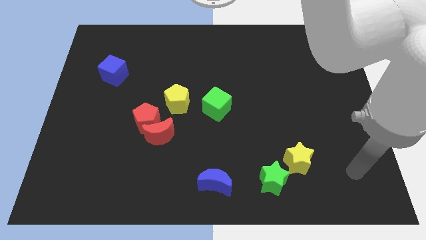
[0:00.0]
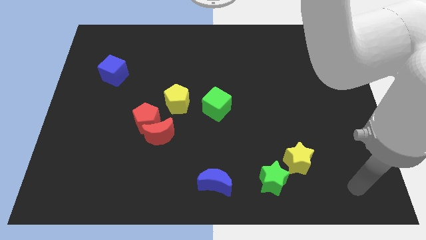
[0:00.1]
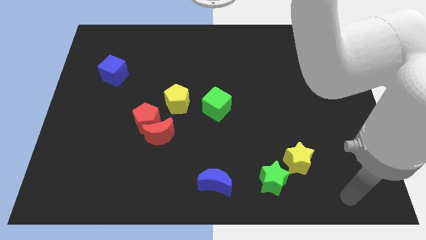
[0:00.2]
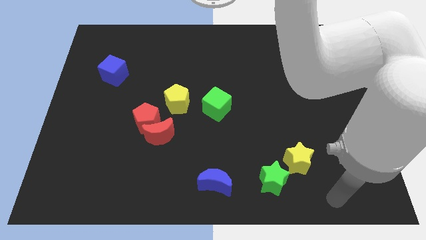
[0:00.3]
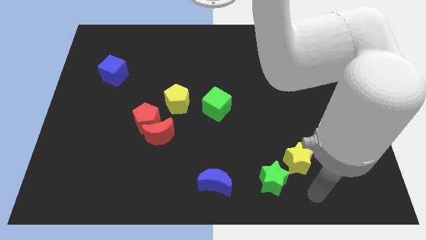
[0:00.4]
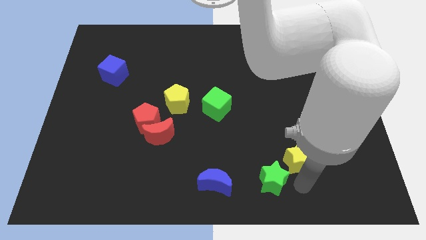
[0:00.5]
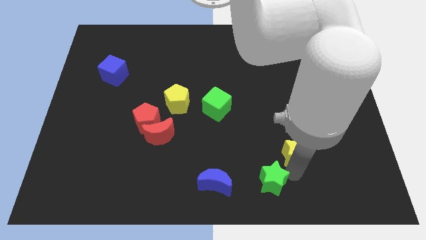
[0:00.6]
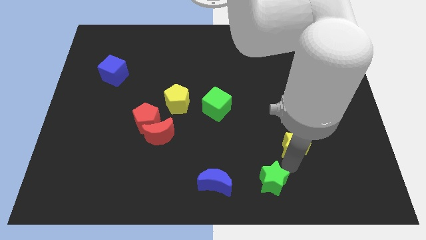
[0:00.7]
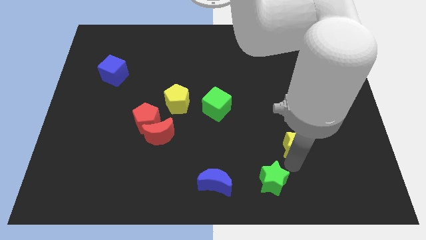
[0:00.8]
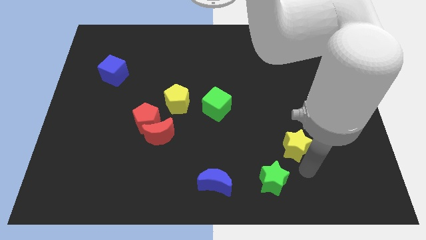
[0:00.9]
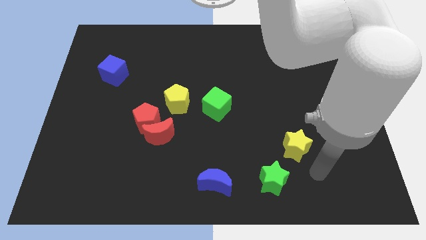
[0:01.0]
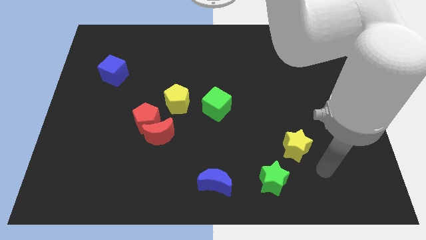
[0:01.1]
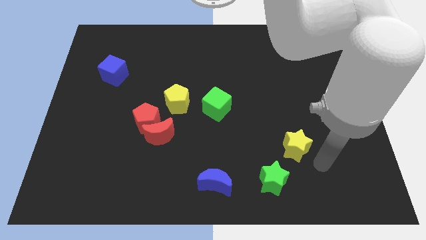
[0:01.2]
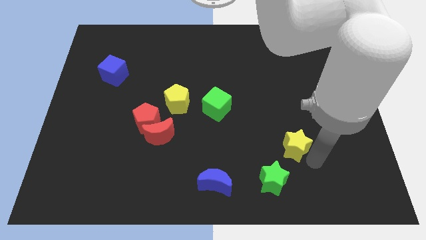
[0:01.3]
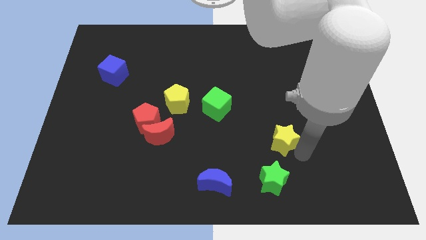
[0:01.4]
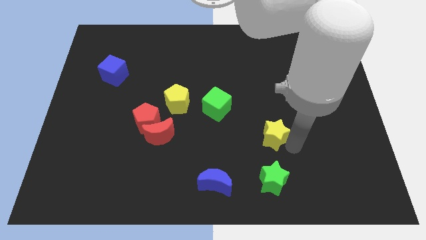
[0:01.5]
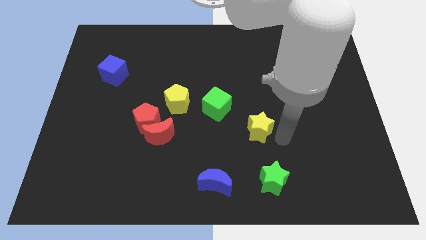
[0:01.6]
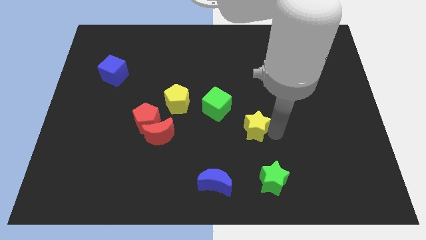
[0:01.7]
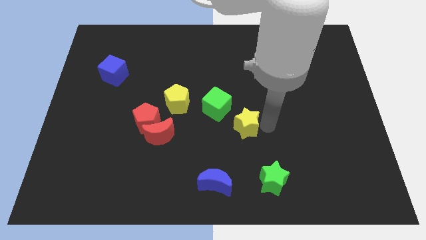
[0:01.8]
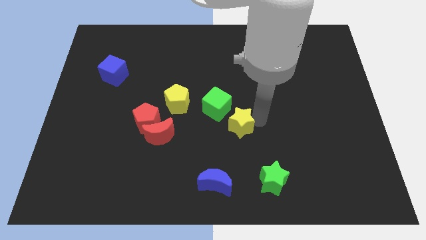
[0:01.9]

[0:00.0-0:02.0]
move the yellow star to the right side of the green cube

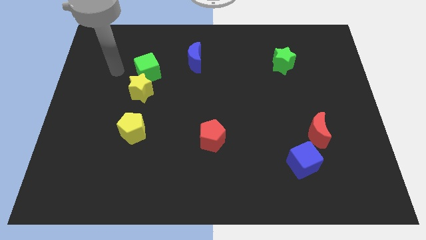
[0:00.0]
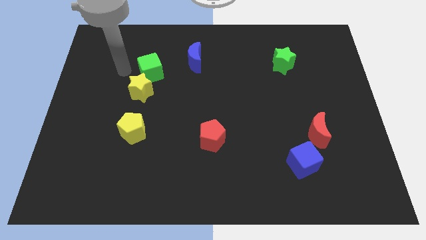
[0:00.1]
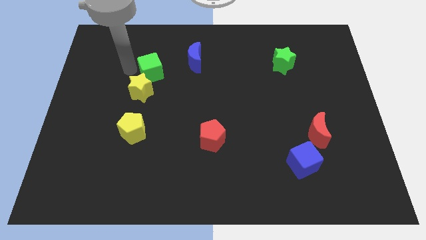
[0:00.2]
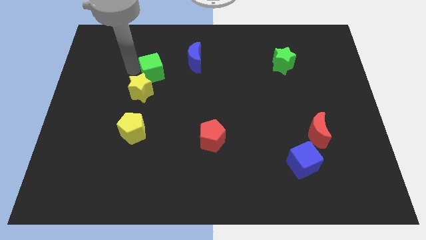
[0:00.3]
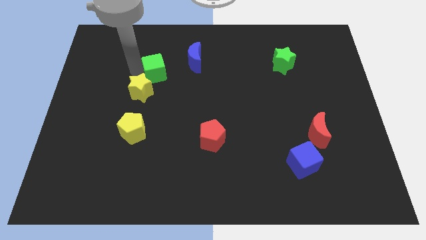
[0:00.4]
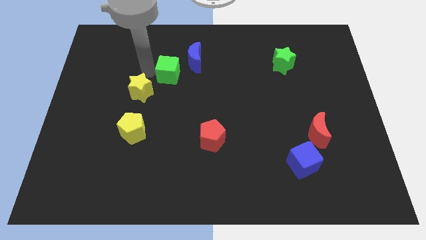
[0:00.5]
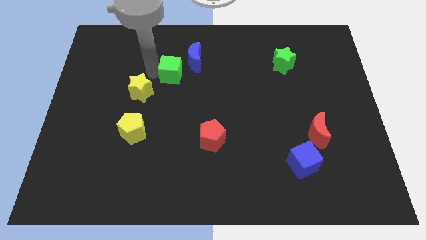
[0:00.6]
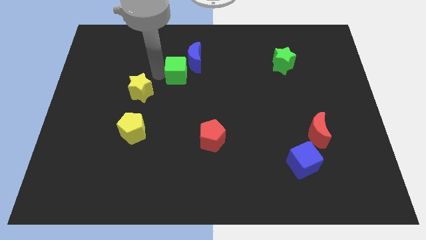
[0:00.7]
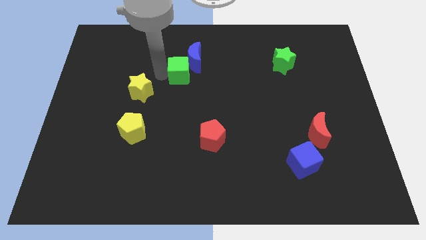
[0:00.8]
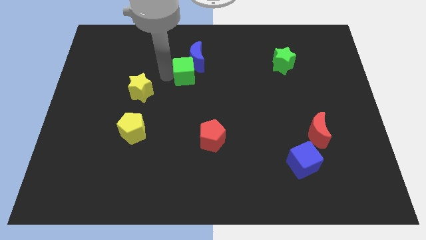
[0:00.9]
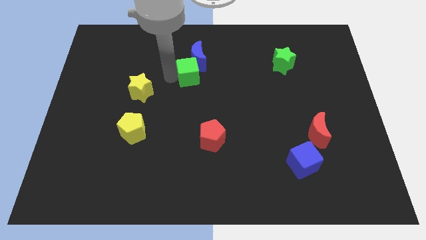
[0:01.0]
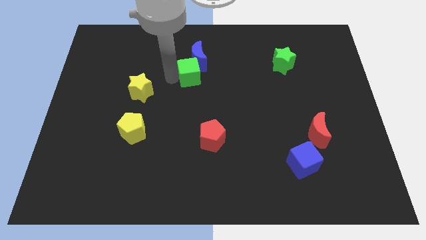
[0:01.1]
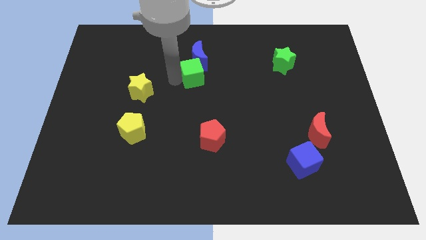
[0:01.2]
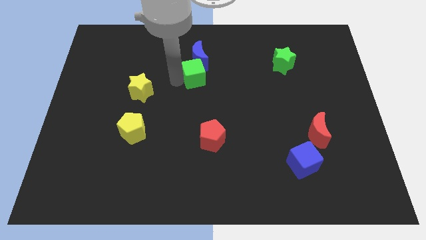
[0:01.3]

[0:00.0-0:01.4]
put green cube at the bottom of blue crescent

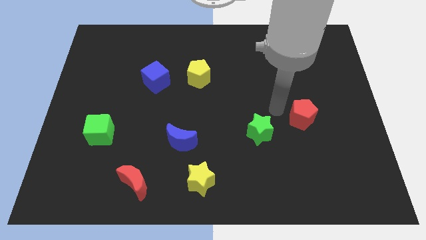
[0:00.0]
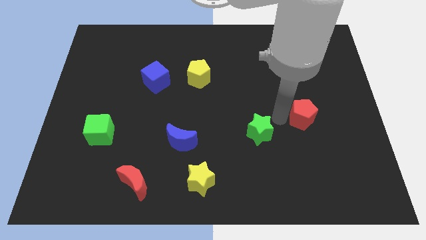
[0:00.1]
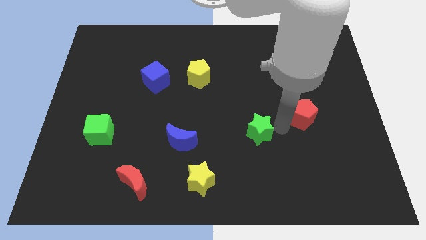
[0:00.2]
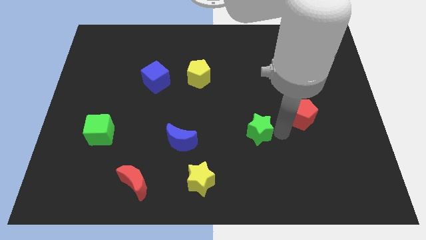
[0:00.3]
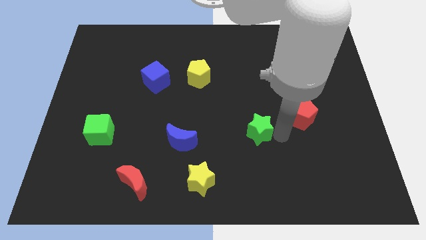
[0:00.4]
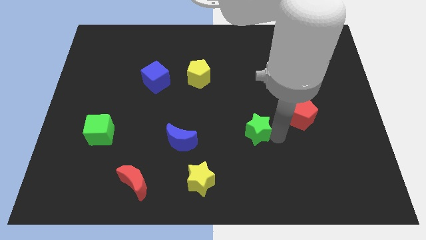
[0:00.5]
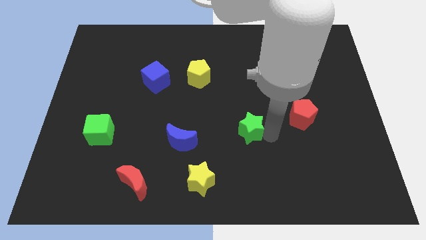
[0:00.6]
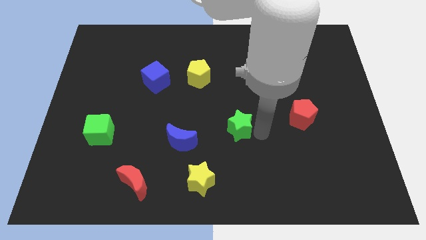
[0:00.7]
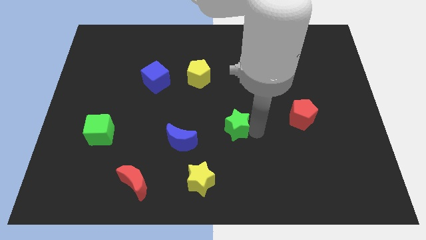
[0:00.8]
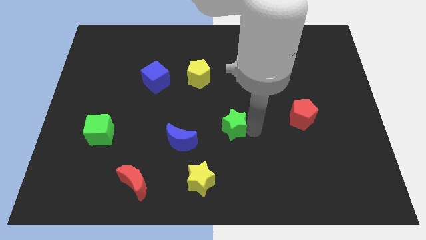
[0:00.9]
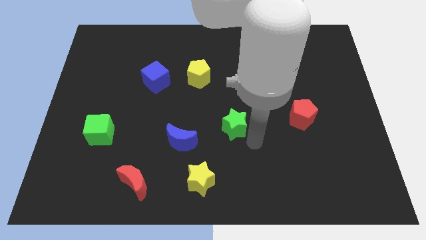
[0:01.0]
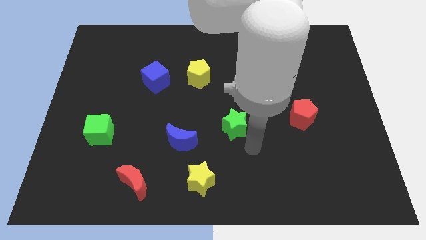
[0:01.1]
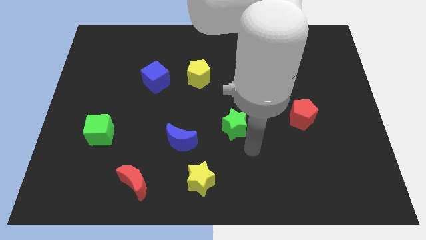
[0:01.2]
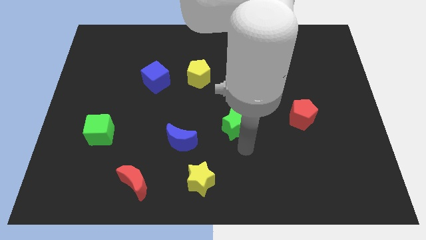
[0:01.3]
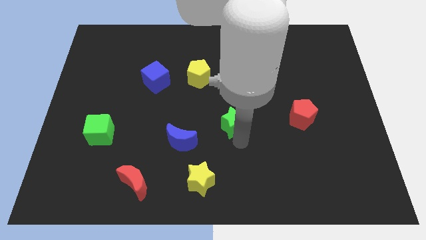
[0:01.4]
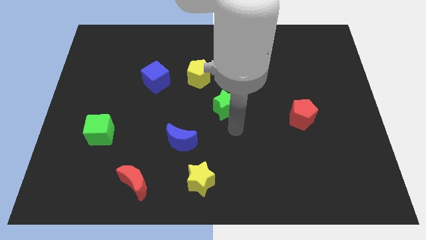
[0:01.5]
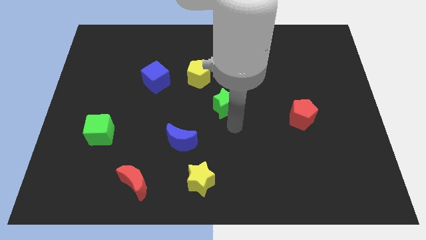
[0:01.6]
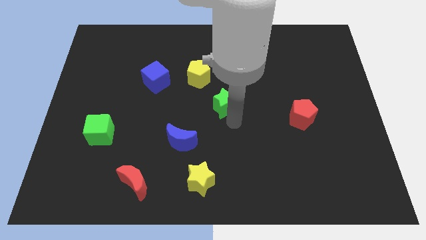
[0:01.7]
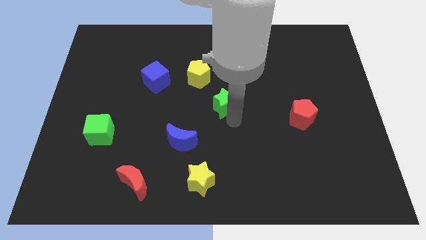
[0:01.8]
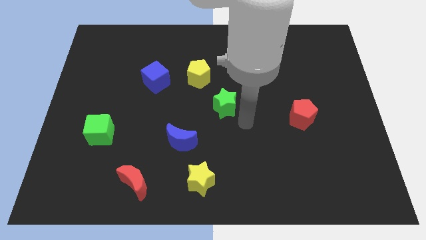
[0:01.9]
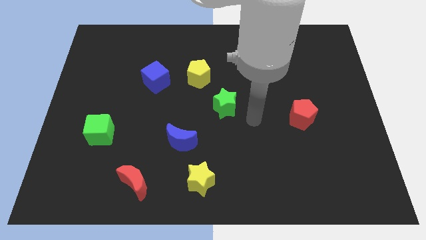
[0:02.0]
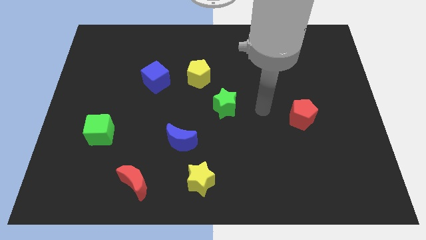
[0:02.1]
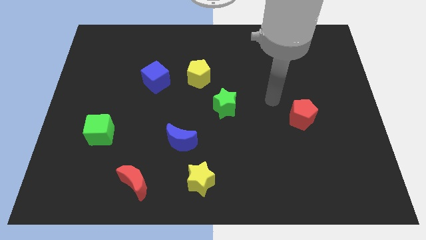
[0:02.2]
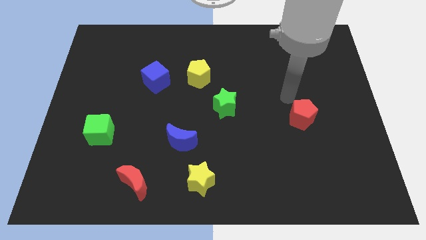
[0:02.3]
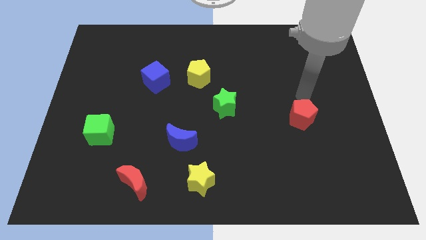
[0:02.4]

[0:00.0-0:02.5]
push the green star to the center of the board

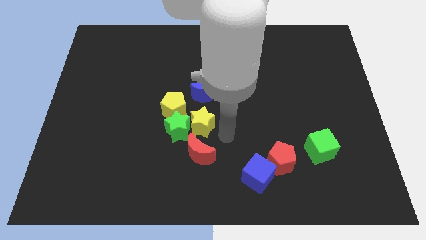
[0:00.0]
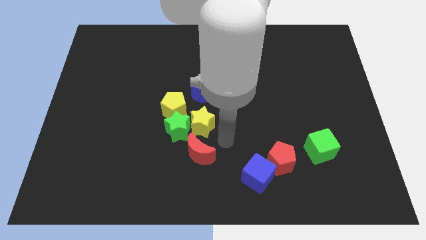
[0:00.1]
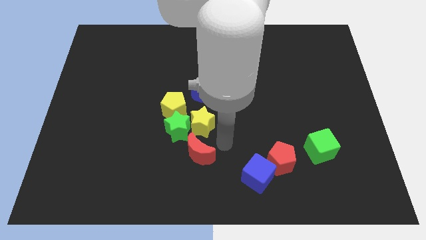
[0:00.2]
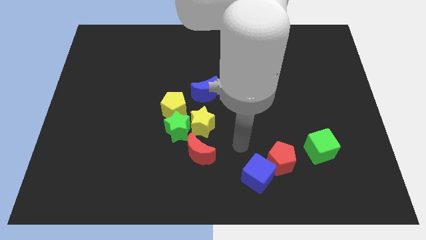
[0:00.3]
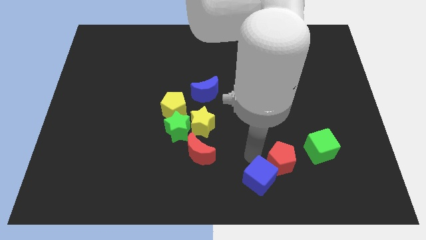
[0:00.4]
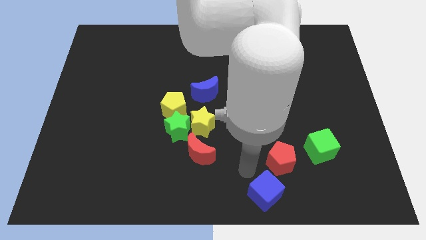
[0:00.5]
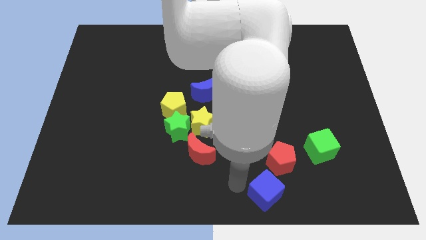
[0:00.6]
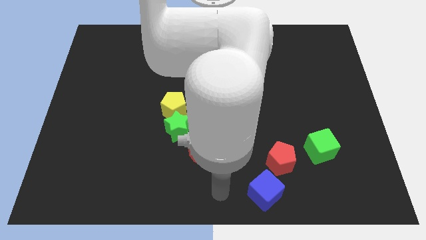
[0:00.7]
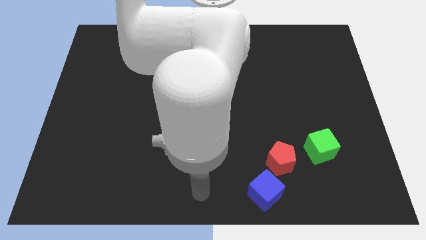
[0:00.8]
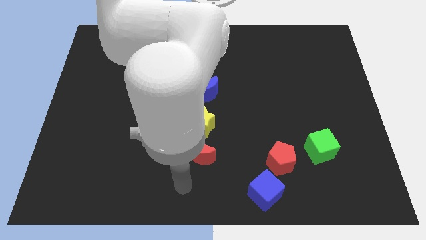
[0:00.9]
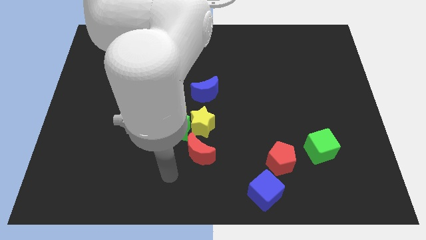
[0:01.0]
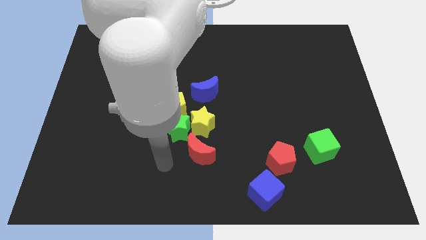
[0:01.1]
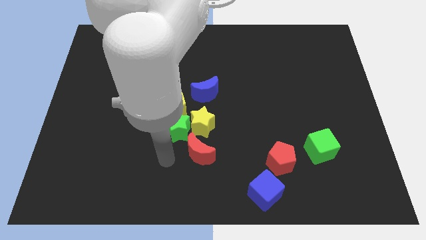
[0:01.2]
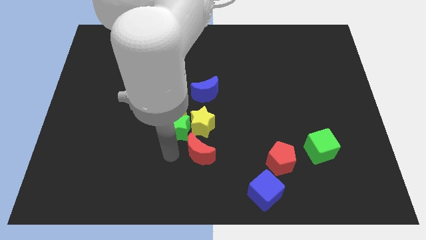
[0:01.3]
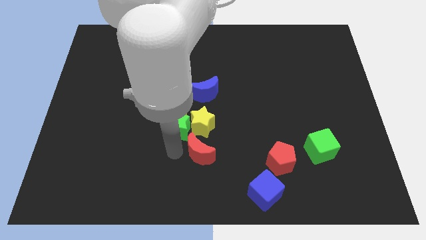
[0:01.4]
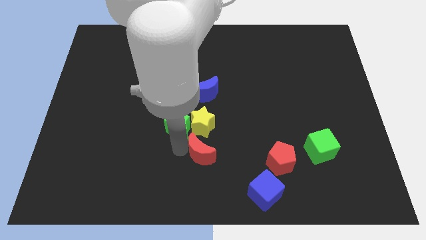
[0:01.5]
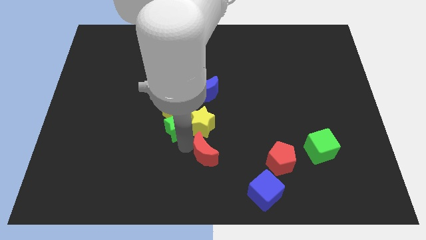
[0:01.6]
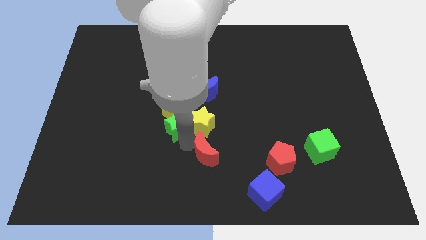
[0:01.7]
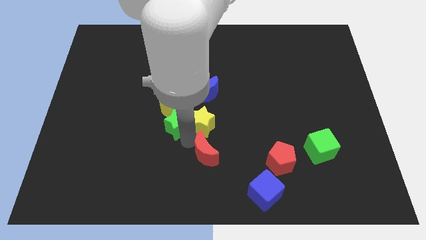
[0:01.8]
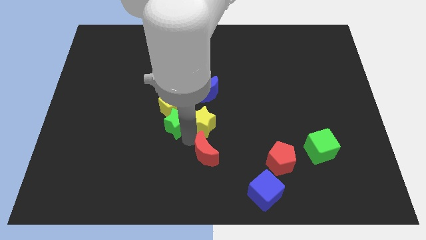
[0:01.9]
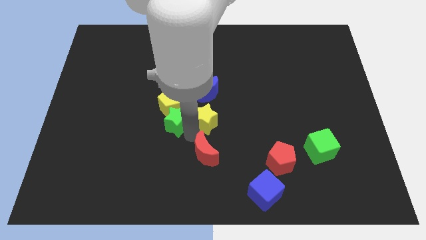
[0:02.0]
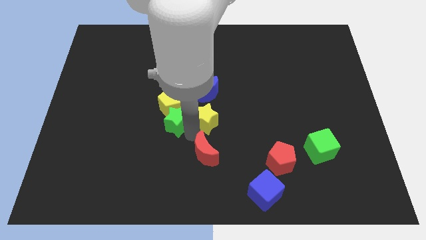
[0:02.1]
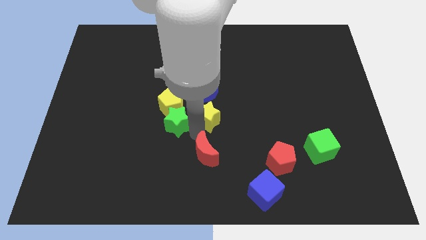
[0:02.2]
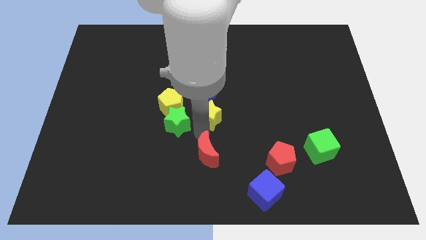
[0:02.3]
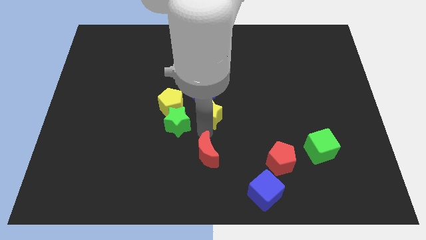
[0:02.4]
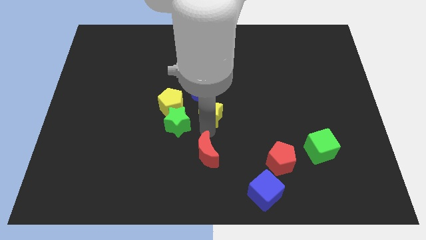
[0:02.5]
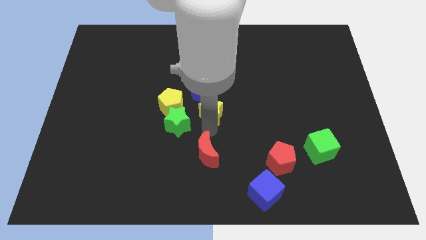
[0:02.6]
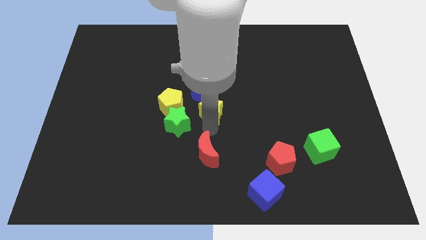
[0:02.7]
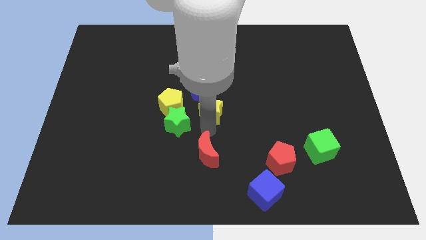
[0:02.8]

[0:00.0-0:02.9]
separate the green star and red moon

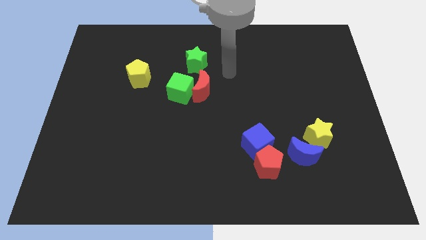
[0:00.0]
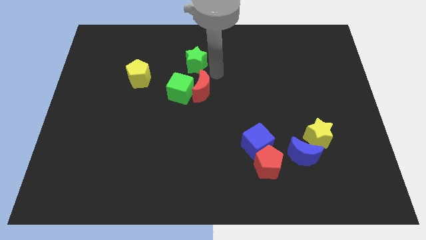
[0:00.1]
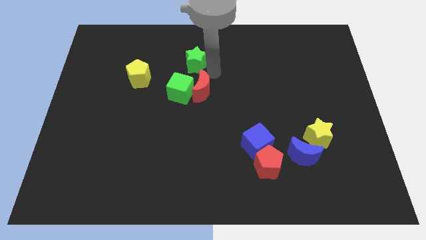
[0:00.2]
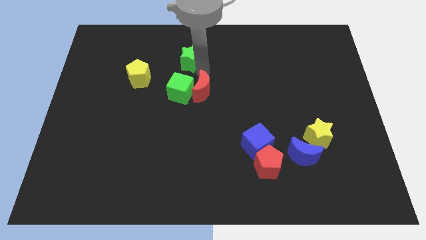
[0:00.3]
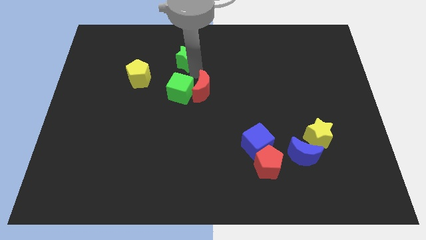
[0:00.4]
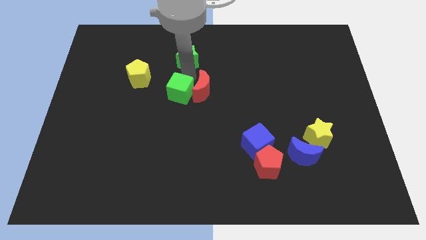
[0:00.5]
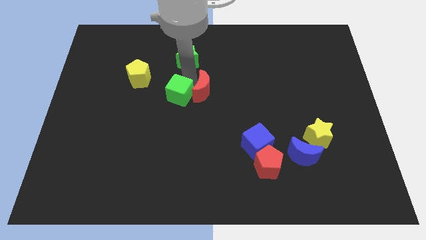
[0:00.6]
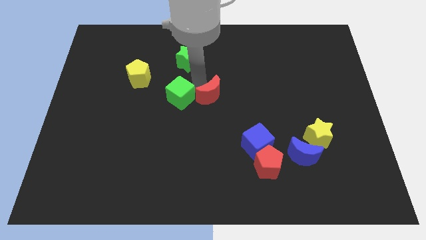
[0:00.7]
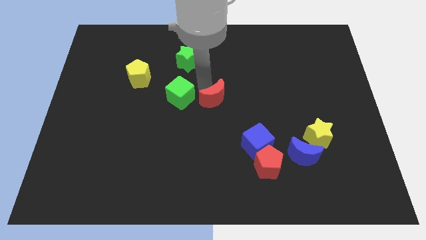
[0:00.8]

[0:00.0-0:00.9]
place the red crescent right to the green cube
